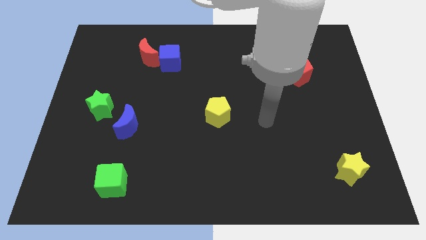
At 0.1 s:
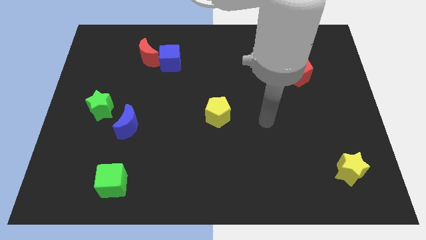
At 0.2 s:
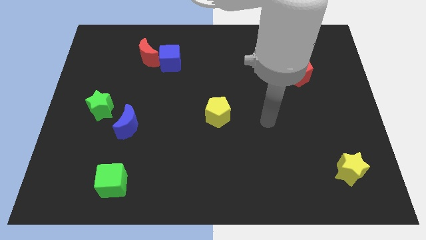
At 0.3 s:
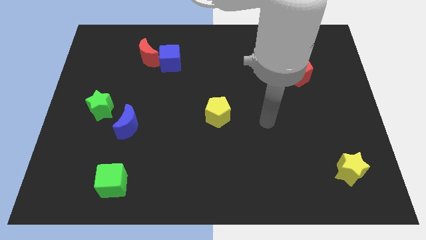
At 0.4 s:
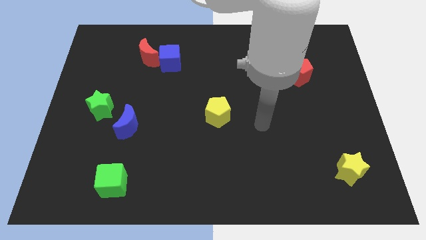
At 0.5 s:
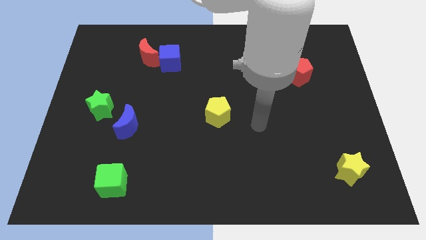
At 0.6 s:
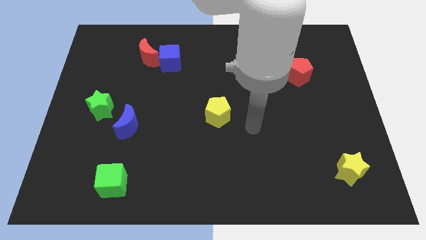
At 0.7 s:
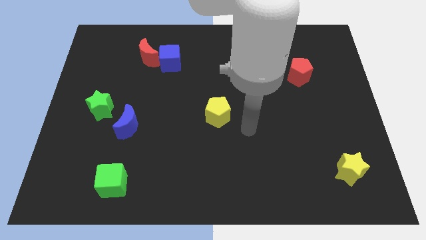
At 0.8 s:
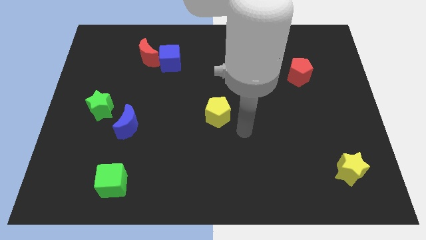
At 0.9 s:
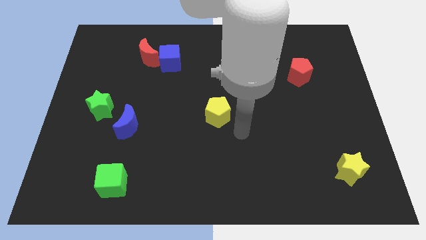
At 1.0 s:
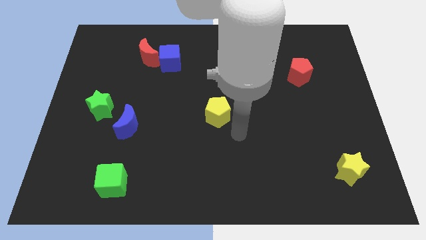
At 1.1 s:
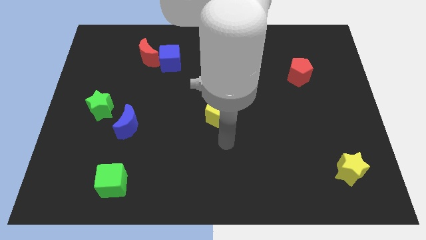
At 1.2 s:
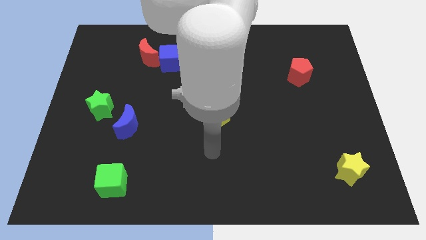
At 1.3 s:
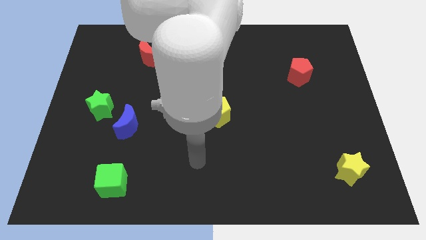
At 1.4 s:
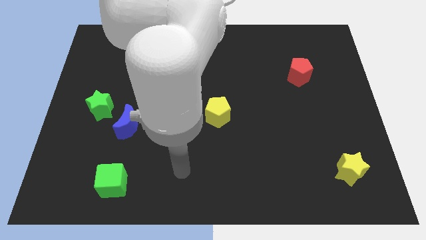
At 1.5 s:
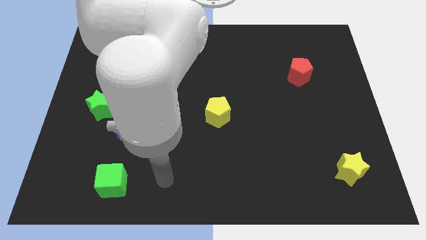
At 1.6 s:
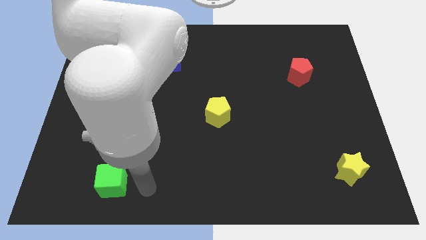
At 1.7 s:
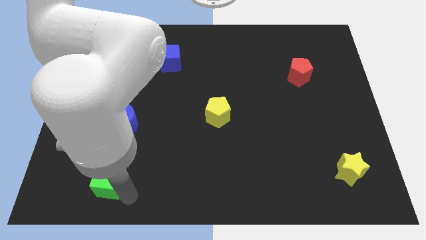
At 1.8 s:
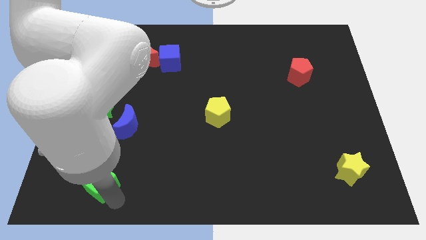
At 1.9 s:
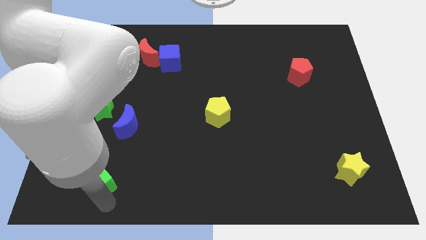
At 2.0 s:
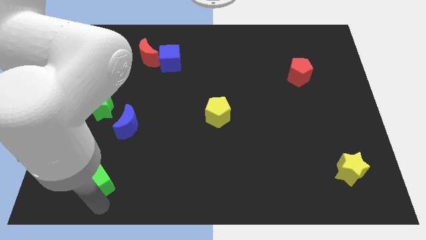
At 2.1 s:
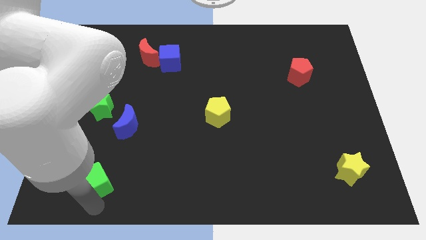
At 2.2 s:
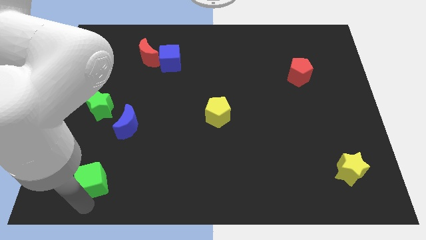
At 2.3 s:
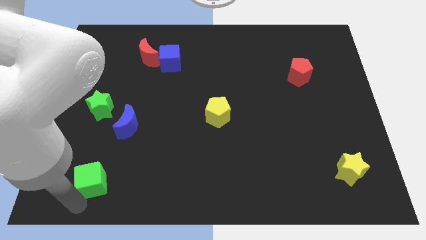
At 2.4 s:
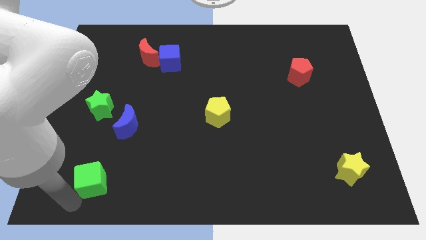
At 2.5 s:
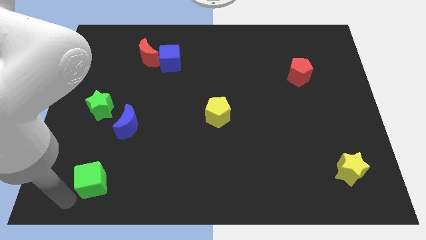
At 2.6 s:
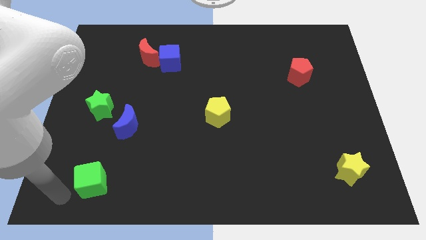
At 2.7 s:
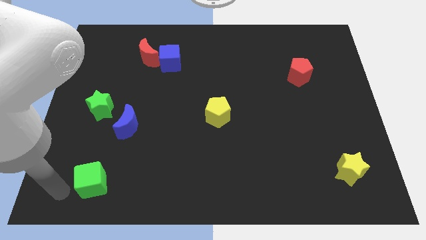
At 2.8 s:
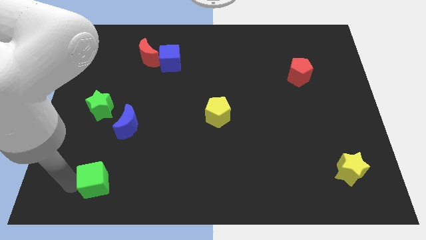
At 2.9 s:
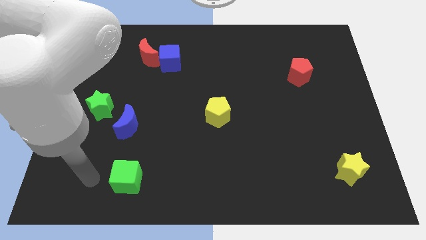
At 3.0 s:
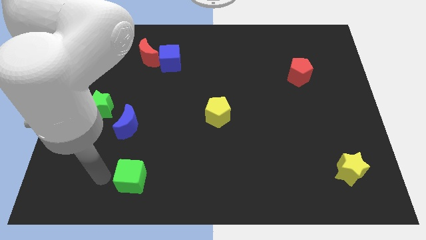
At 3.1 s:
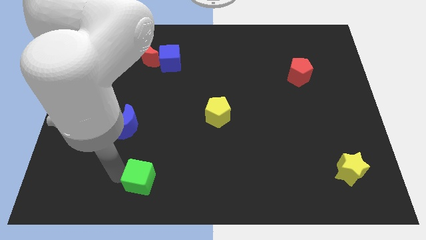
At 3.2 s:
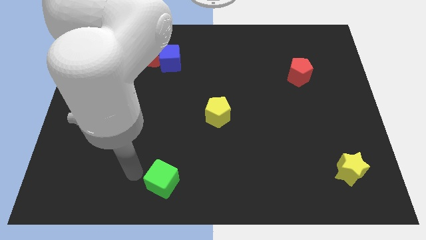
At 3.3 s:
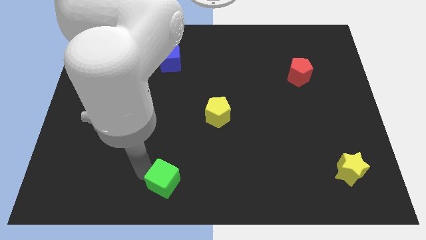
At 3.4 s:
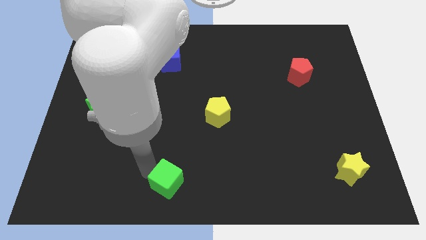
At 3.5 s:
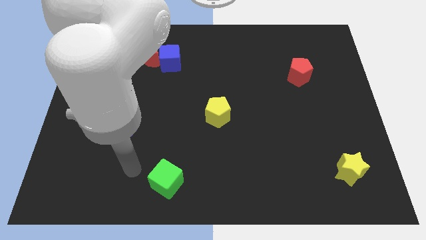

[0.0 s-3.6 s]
move the green cube below the blue cube

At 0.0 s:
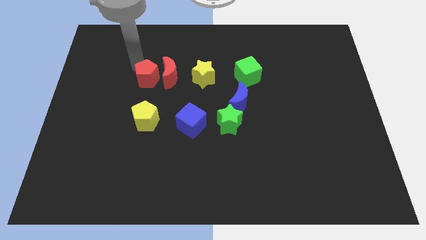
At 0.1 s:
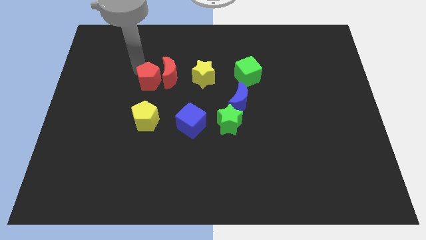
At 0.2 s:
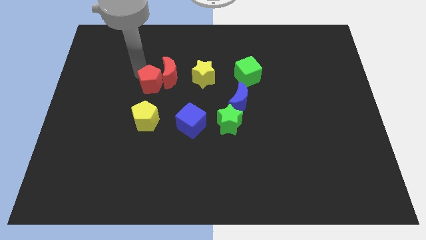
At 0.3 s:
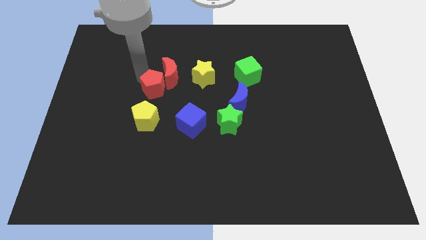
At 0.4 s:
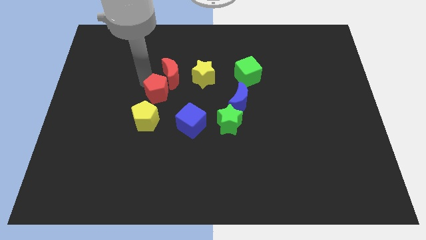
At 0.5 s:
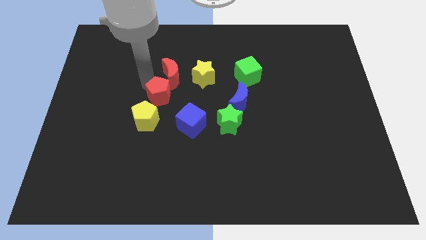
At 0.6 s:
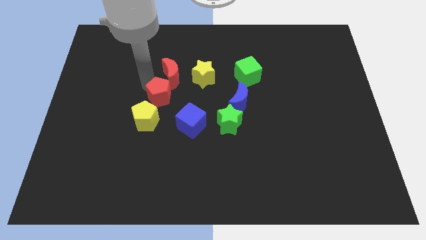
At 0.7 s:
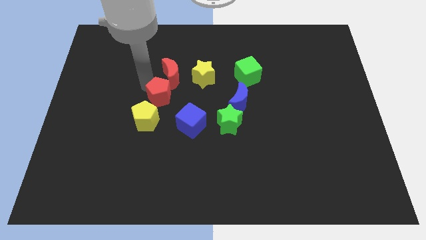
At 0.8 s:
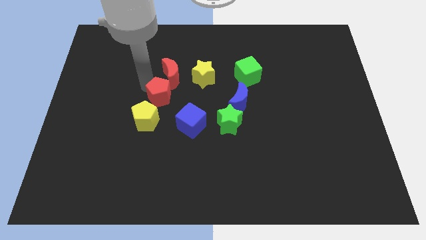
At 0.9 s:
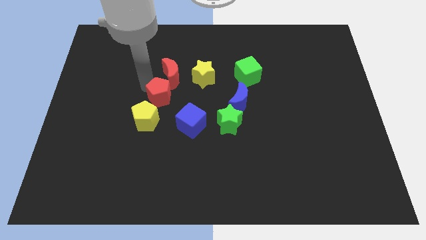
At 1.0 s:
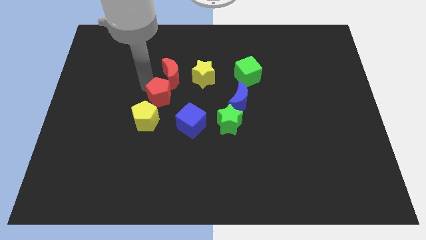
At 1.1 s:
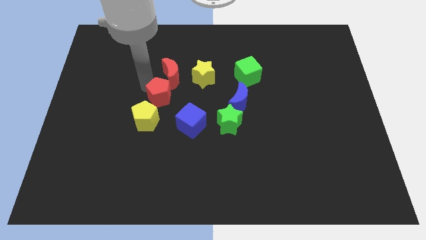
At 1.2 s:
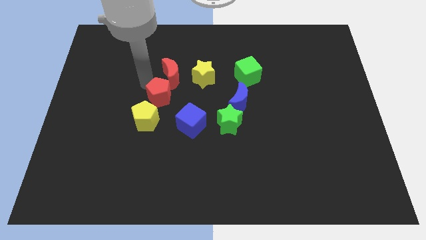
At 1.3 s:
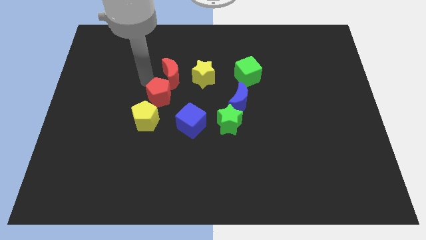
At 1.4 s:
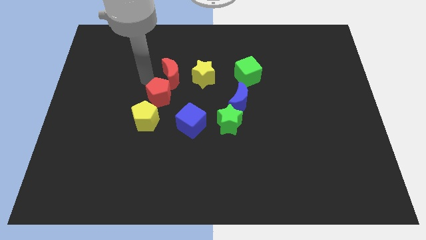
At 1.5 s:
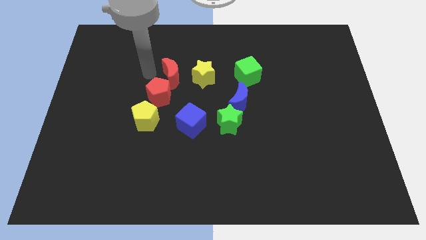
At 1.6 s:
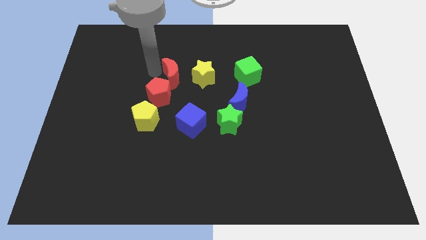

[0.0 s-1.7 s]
move the red pentagon above the yellow pentagon

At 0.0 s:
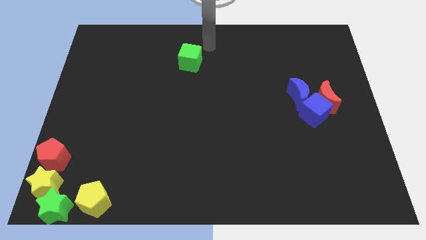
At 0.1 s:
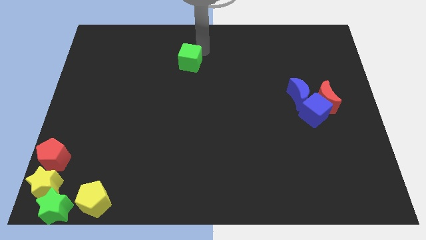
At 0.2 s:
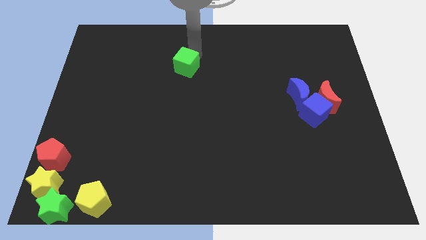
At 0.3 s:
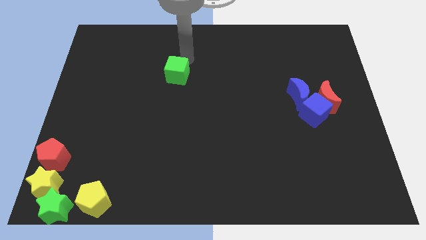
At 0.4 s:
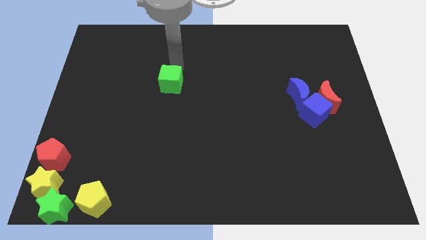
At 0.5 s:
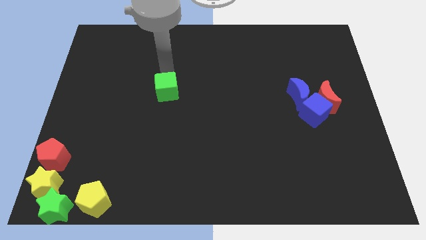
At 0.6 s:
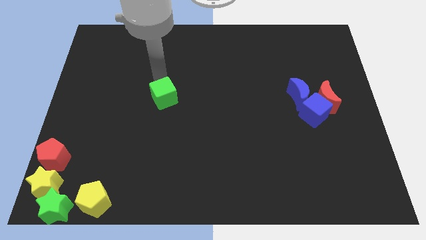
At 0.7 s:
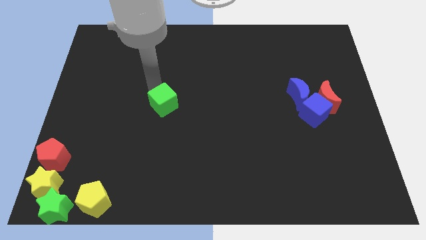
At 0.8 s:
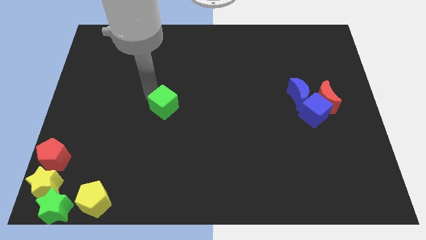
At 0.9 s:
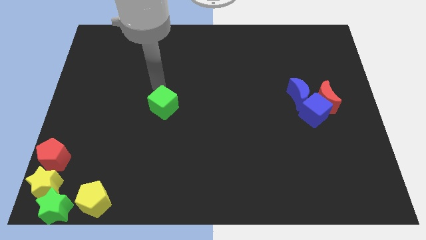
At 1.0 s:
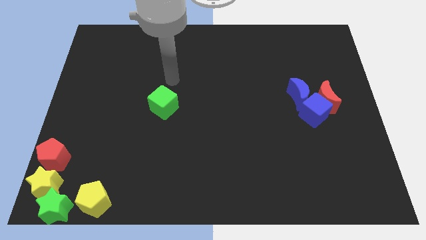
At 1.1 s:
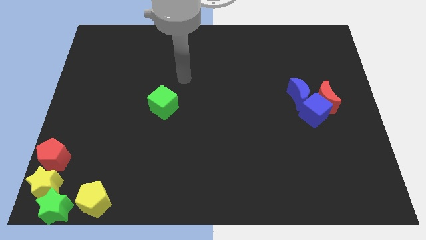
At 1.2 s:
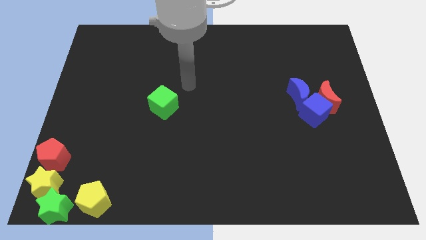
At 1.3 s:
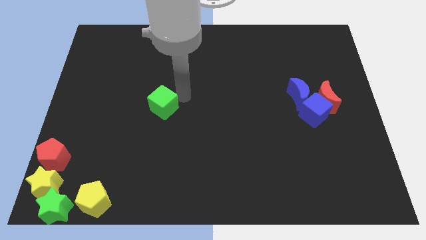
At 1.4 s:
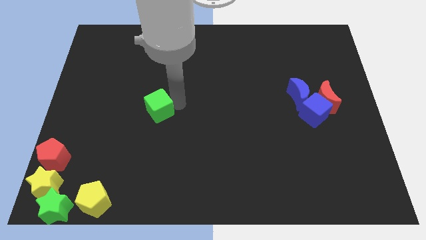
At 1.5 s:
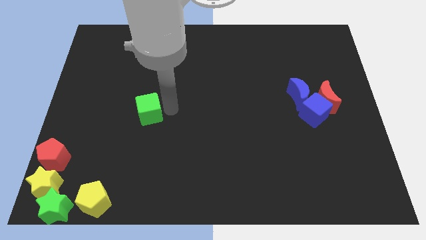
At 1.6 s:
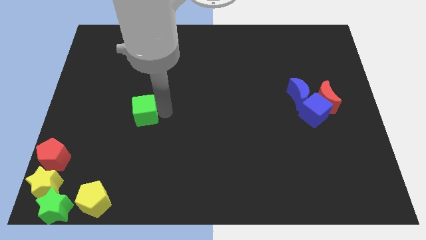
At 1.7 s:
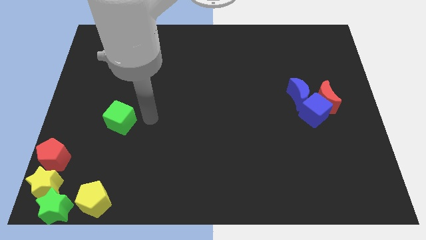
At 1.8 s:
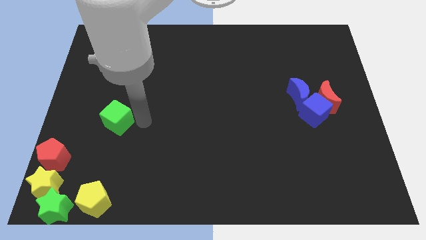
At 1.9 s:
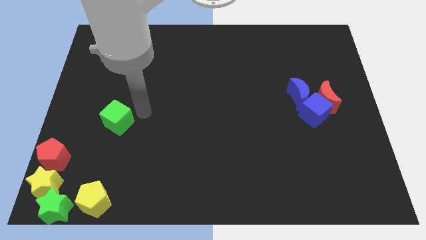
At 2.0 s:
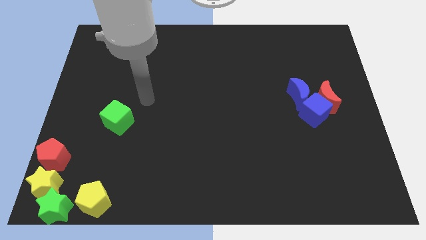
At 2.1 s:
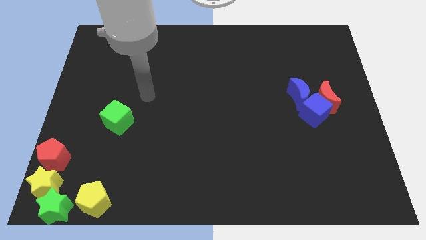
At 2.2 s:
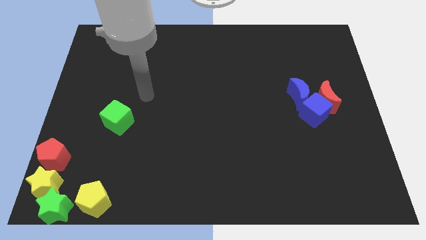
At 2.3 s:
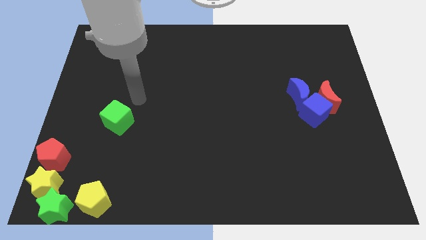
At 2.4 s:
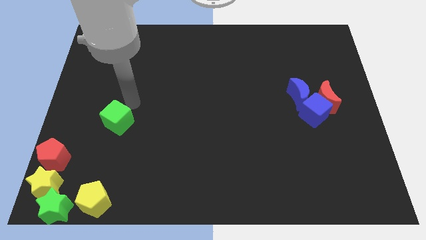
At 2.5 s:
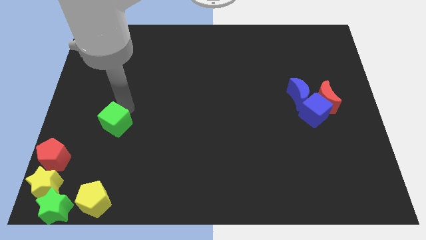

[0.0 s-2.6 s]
move the green cube diagonal top right to the red pentagon

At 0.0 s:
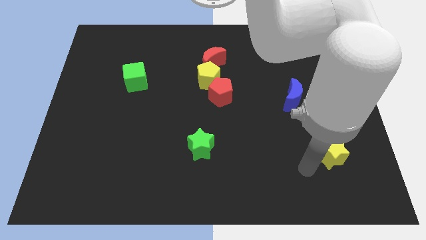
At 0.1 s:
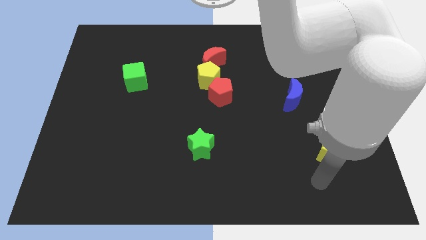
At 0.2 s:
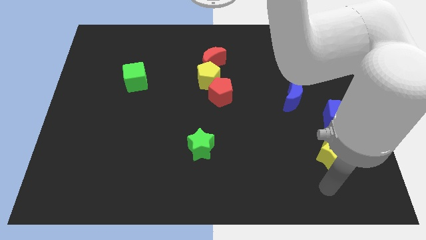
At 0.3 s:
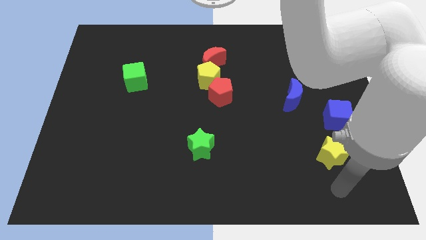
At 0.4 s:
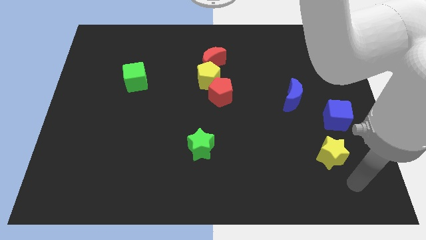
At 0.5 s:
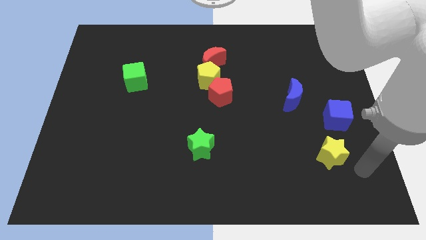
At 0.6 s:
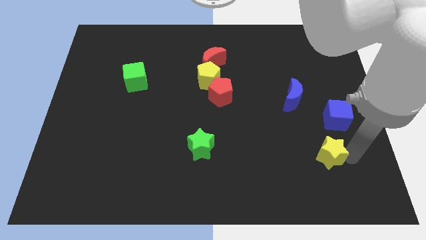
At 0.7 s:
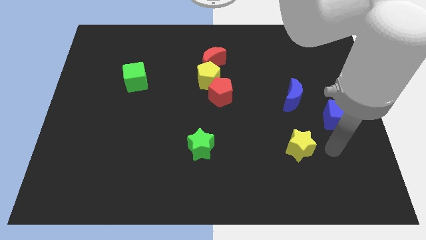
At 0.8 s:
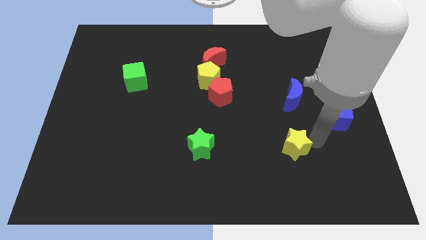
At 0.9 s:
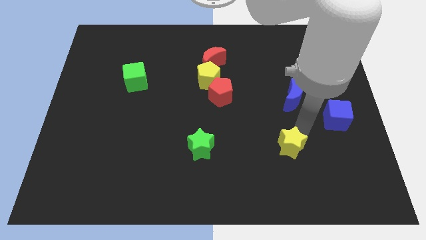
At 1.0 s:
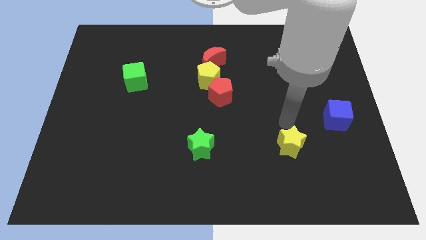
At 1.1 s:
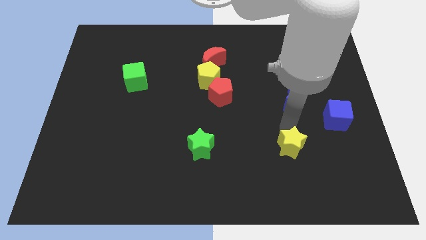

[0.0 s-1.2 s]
push the yellow star upward
